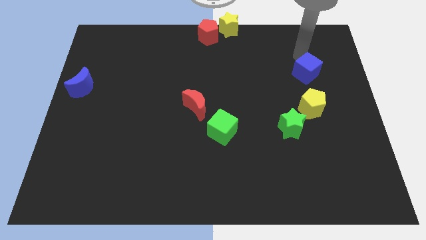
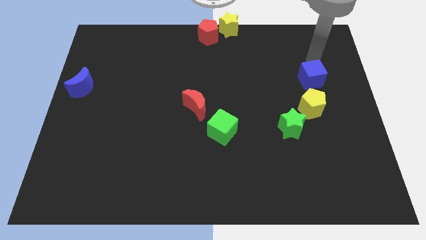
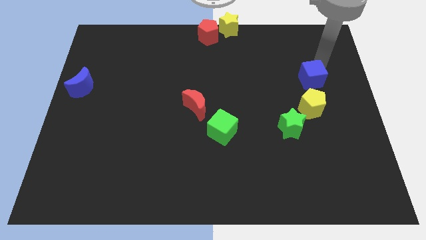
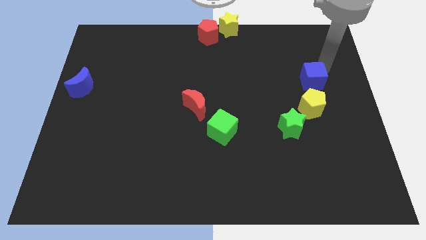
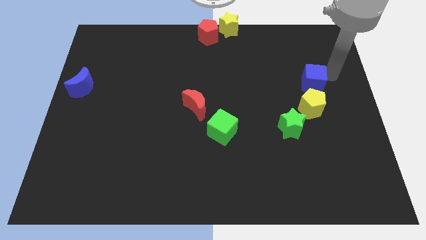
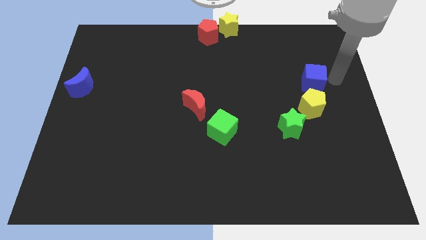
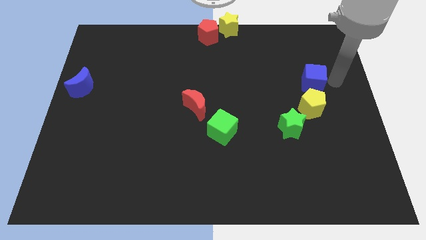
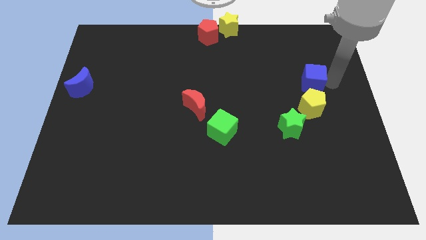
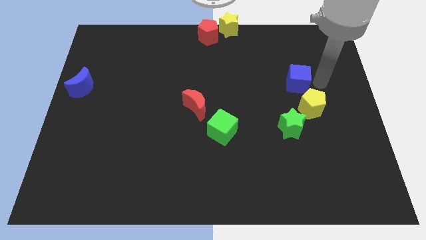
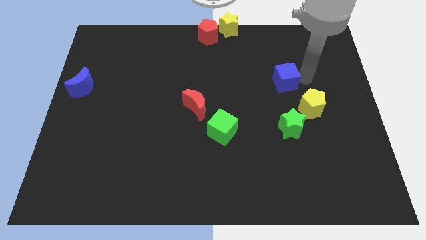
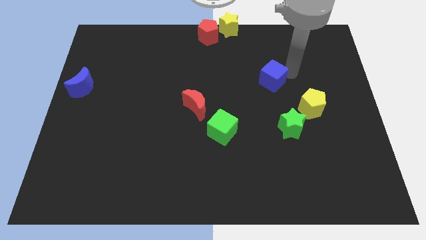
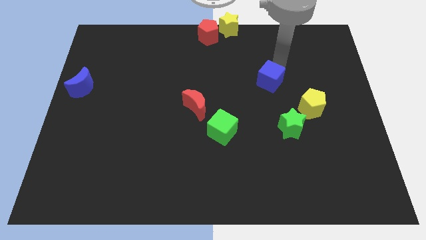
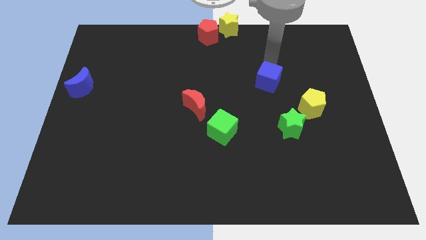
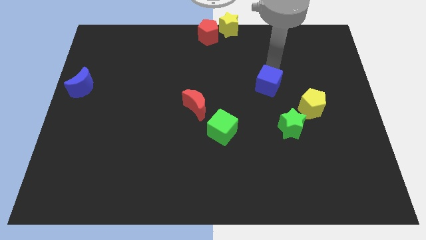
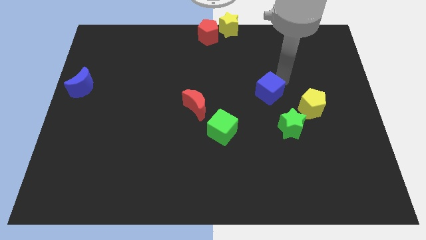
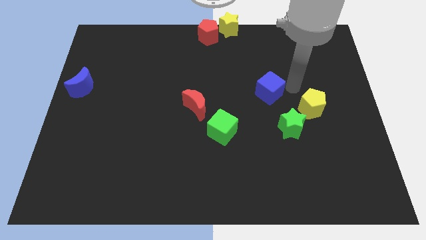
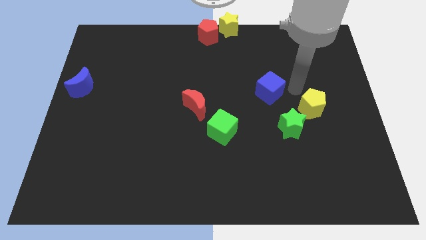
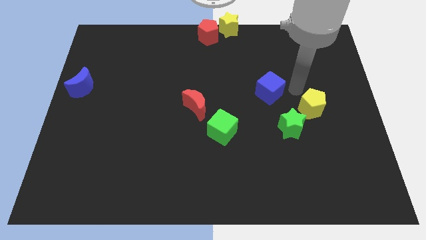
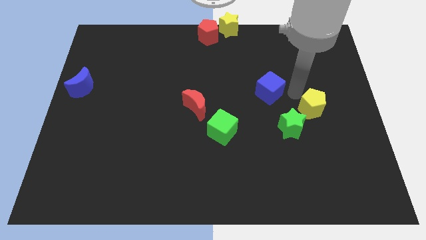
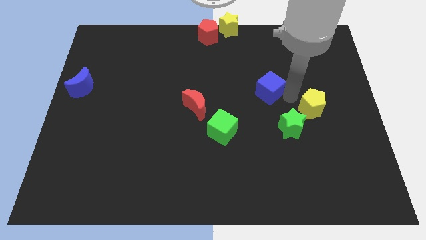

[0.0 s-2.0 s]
push the blue cube towards the center of the board

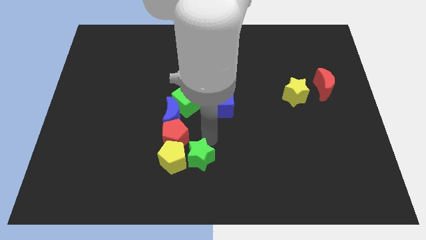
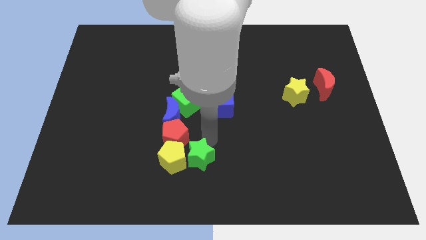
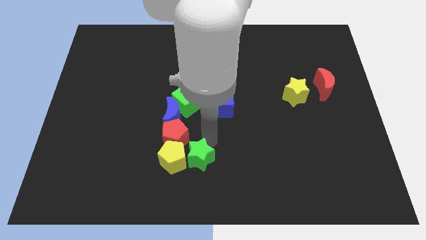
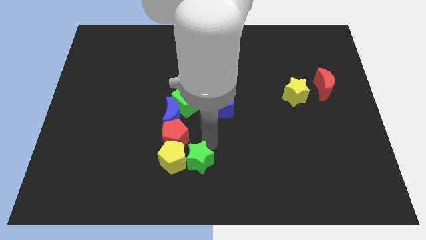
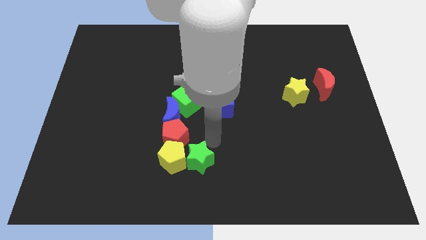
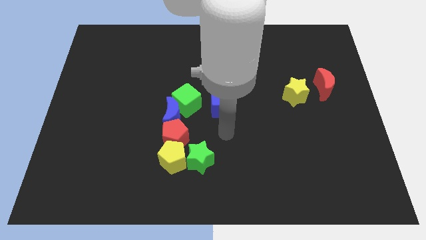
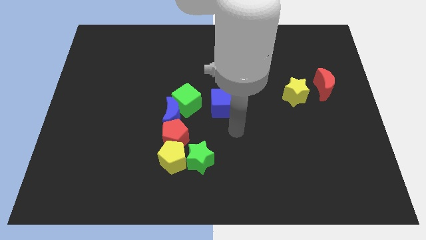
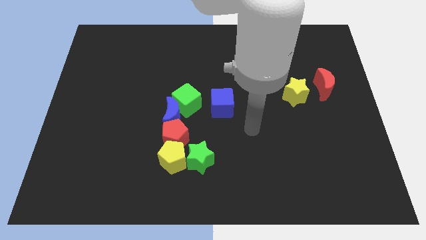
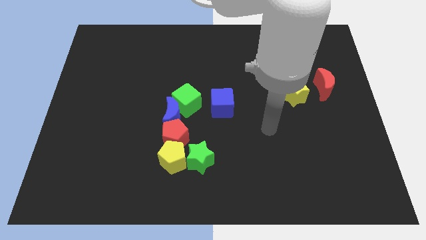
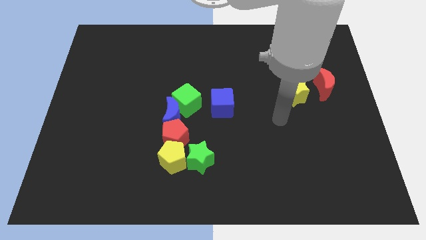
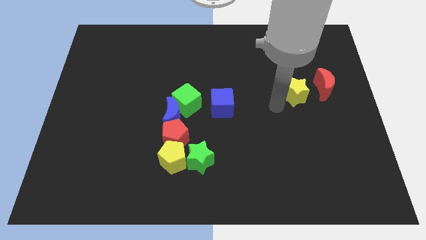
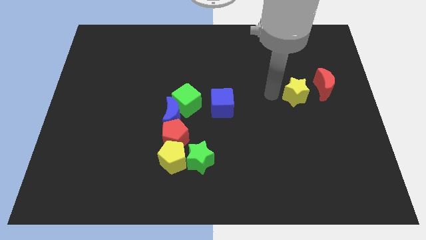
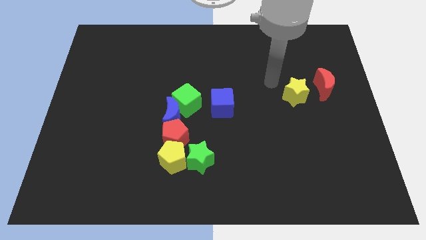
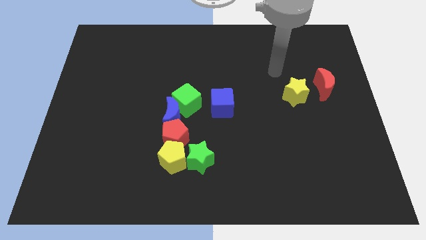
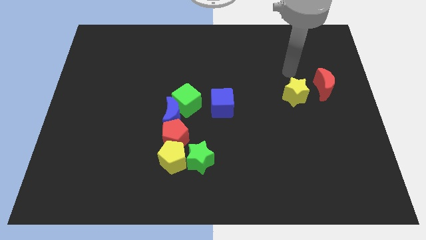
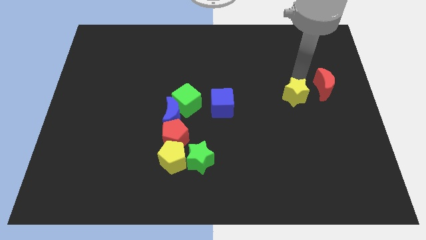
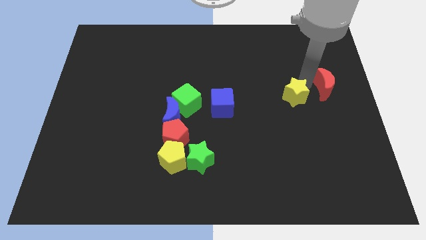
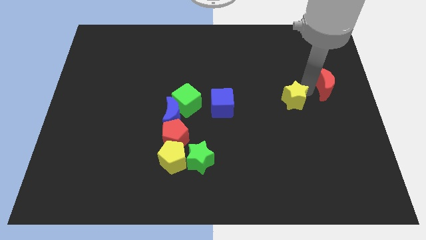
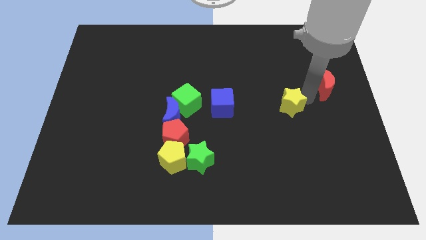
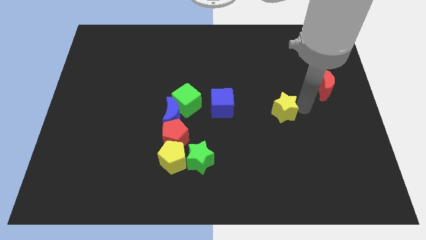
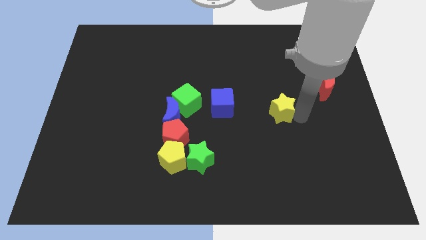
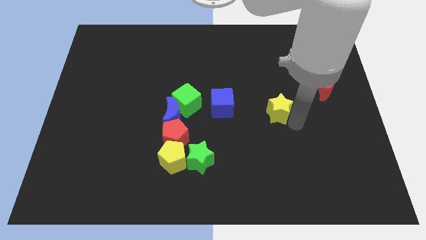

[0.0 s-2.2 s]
move your arm away from the green star

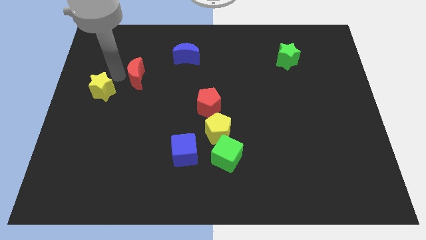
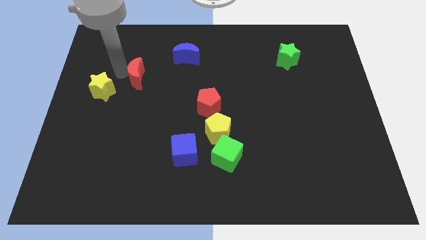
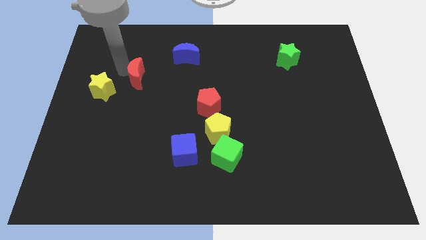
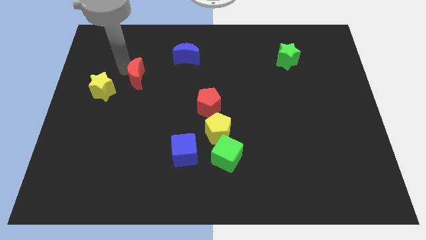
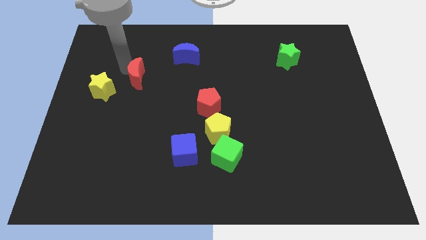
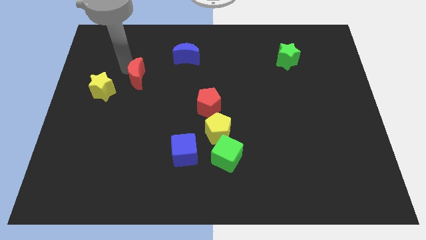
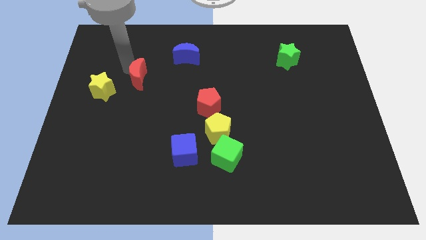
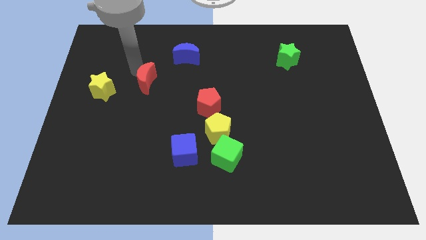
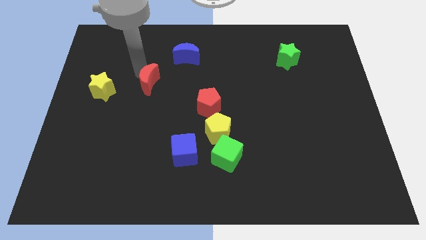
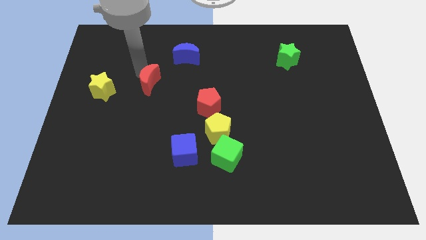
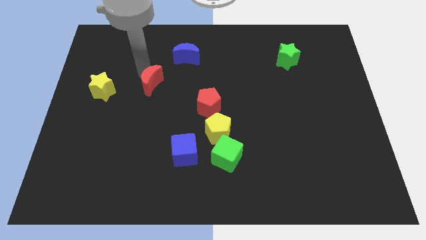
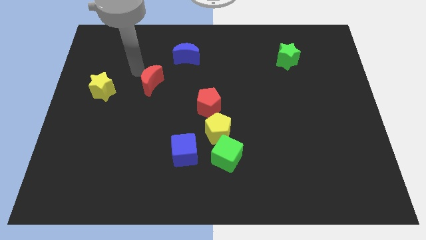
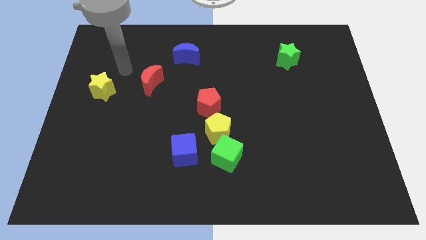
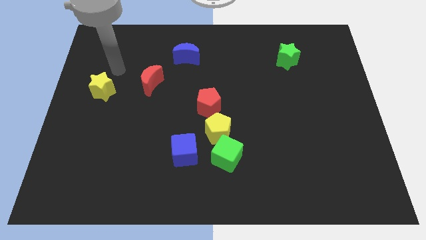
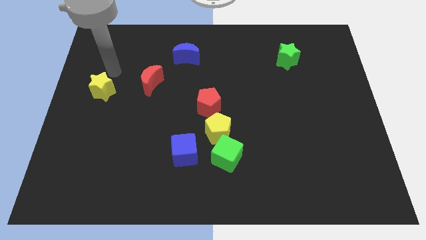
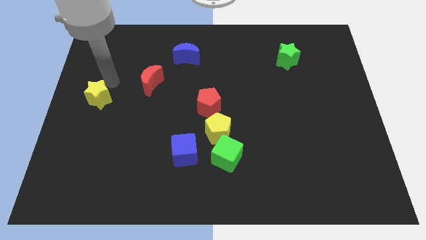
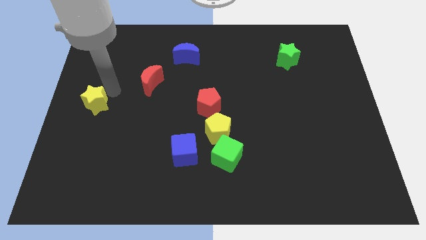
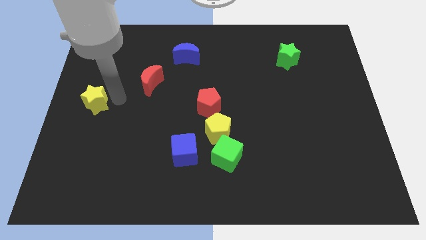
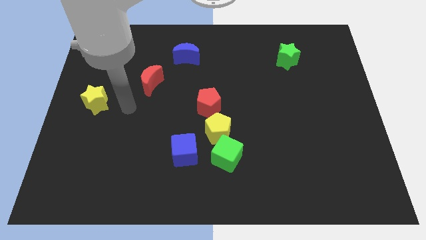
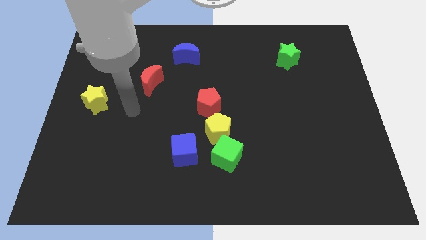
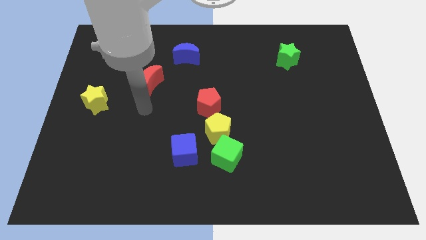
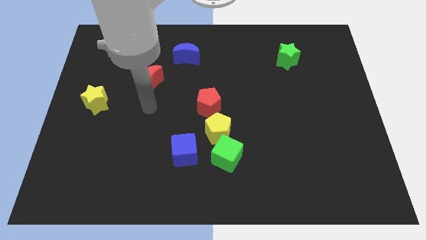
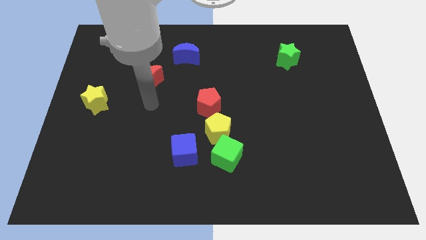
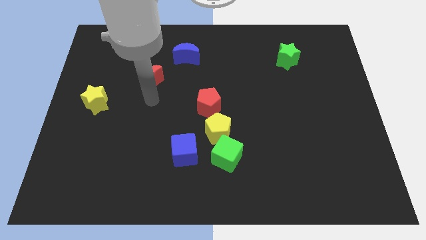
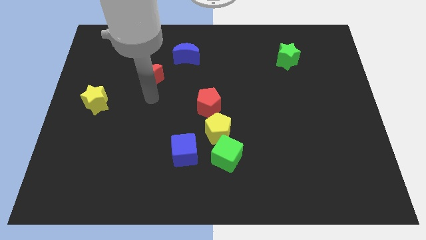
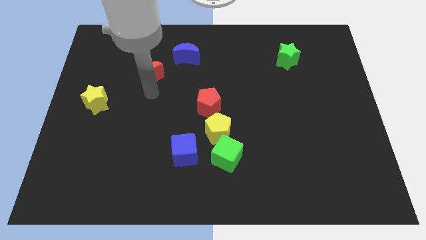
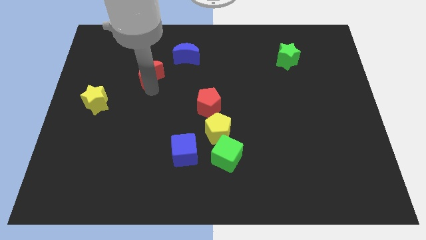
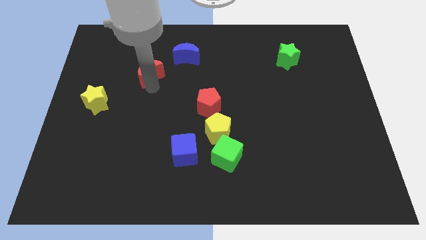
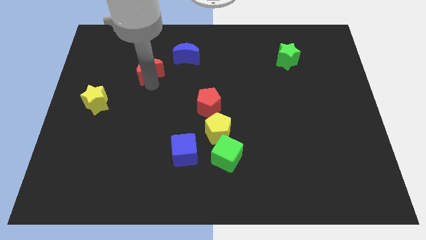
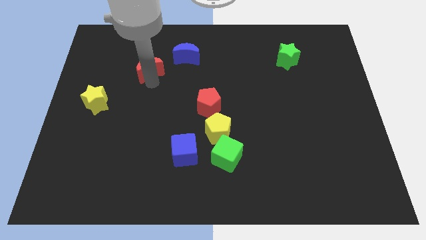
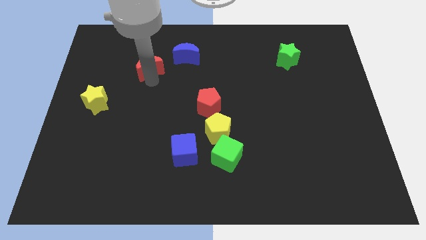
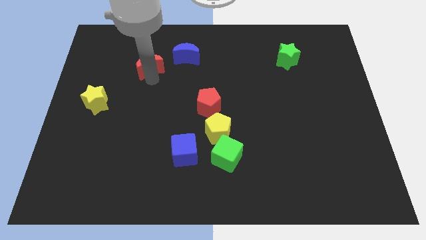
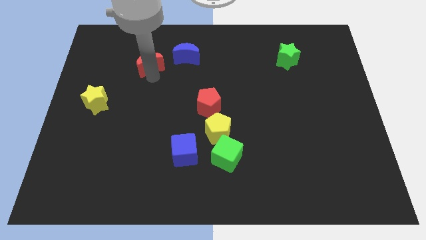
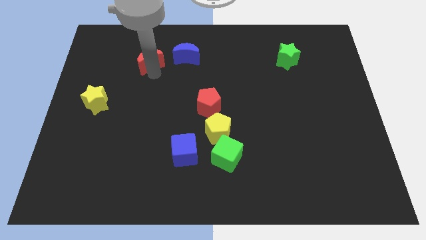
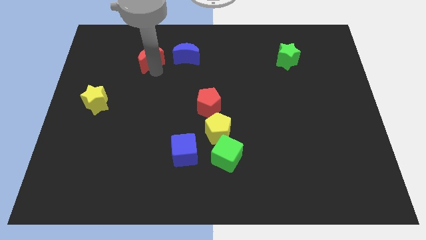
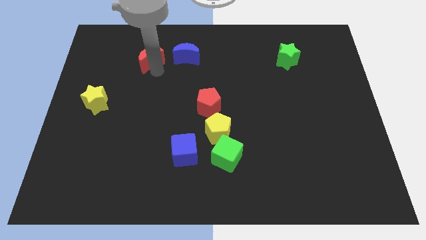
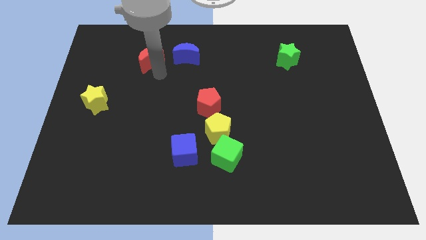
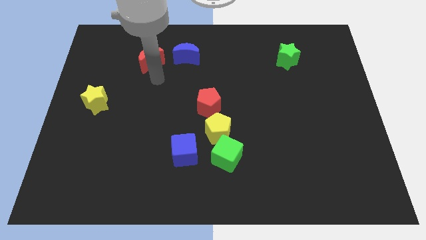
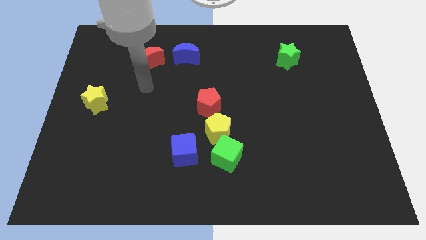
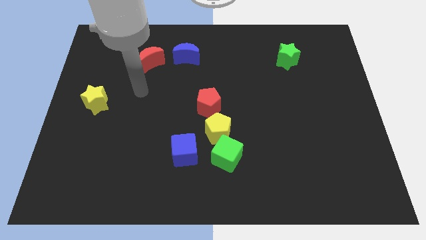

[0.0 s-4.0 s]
place the red moon to the left of blue moon

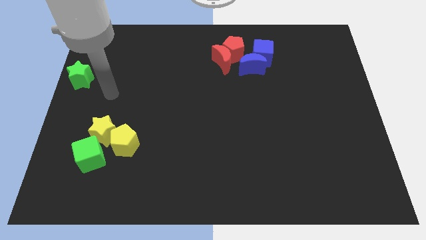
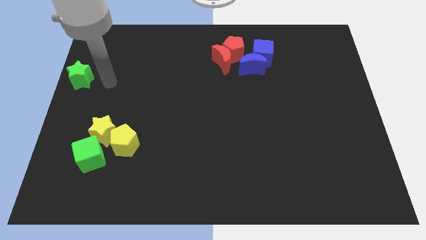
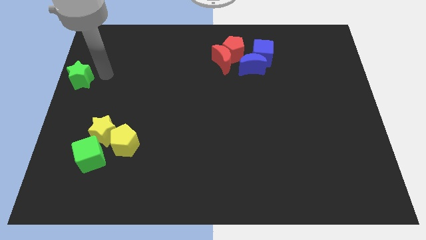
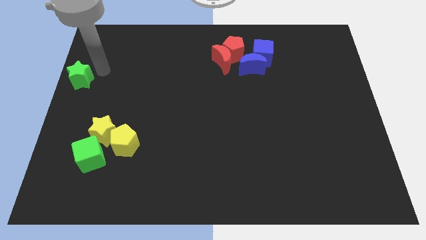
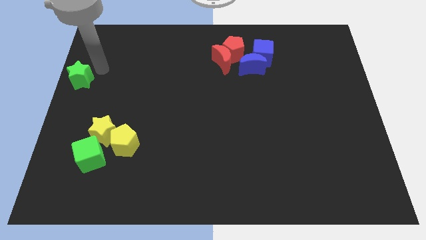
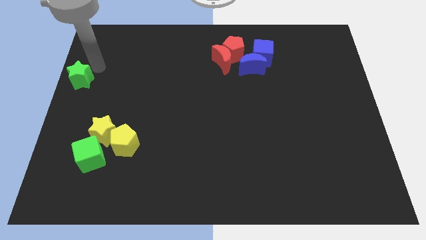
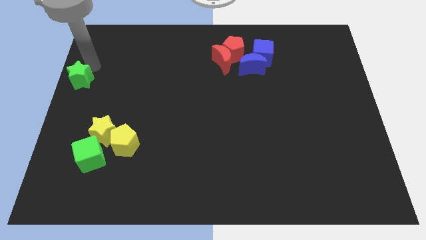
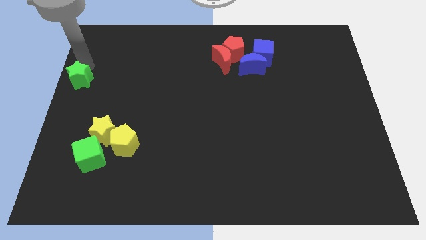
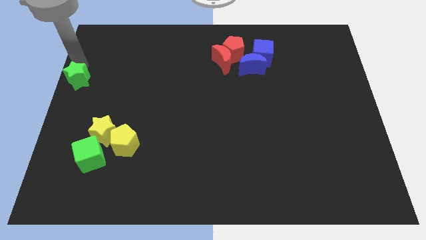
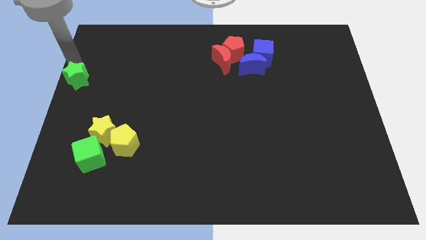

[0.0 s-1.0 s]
point your arm to the top of the green star
